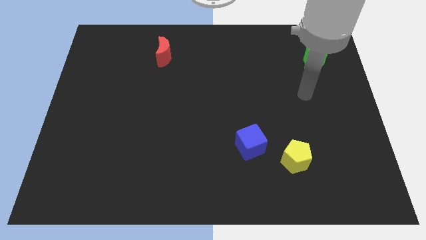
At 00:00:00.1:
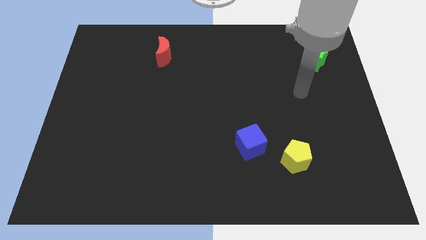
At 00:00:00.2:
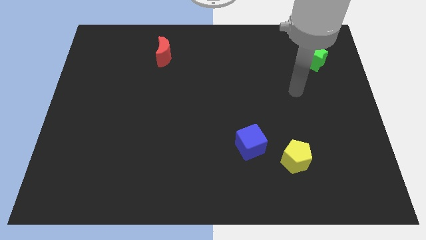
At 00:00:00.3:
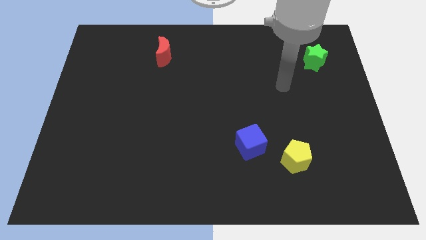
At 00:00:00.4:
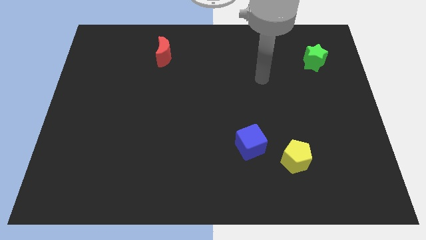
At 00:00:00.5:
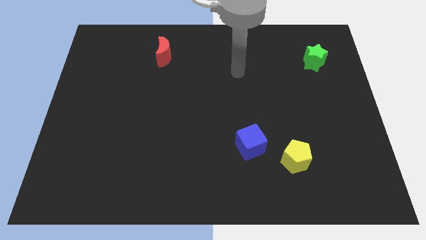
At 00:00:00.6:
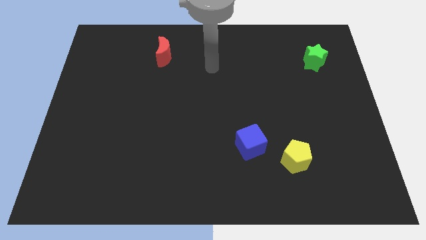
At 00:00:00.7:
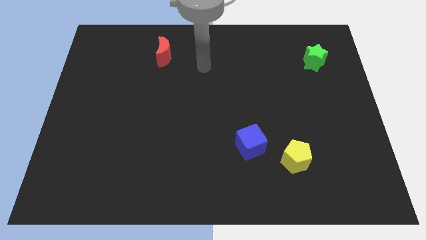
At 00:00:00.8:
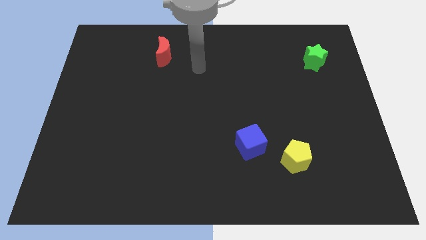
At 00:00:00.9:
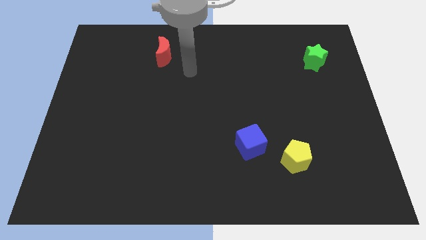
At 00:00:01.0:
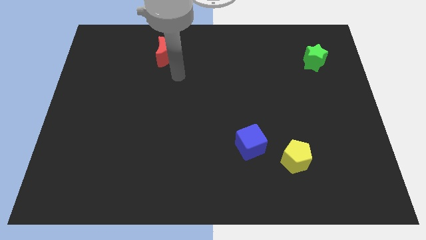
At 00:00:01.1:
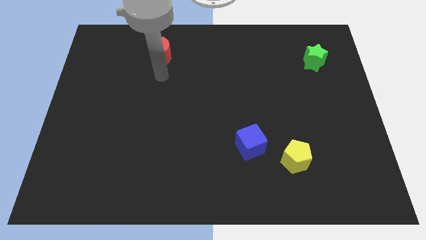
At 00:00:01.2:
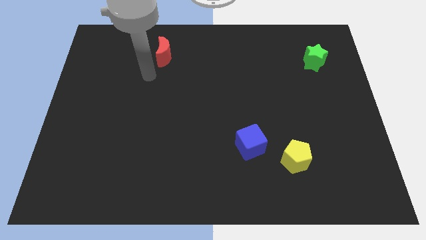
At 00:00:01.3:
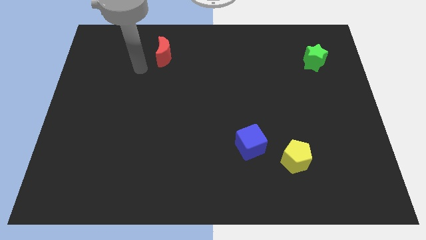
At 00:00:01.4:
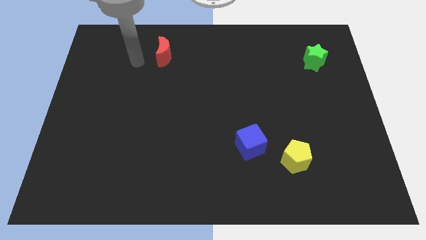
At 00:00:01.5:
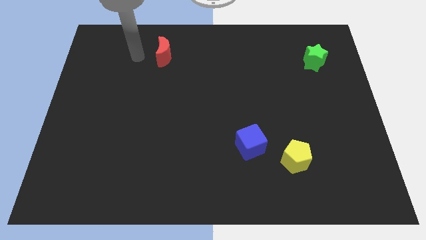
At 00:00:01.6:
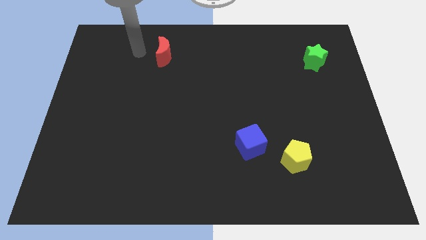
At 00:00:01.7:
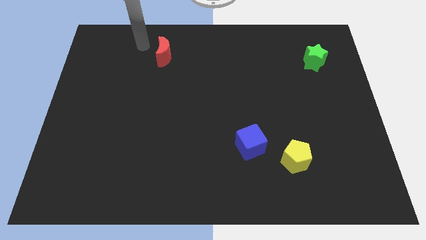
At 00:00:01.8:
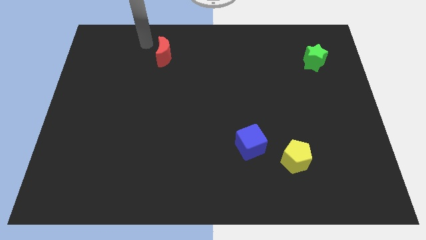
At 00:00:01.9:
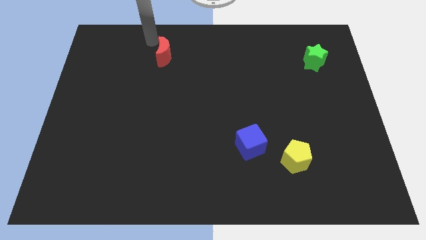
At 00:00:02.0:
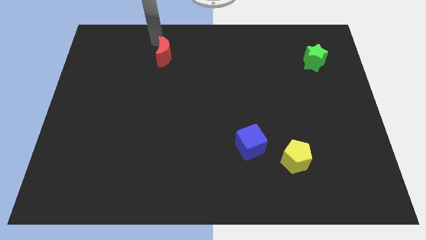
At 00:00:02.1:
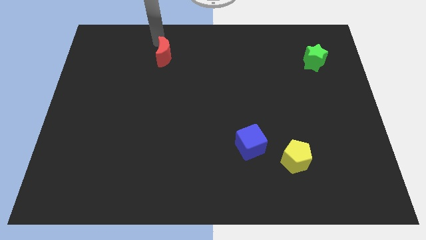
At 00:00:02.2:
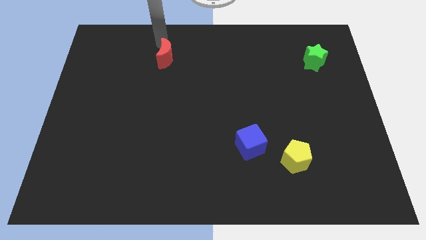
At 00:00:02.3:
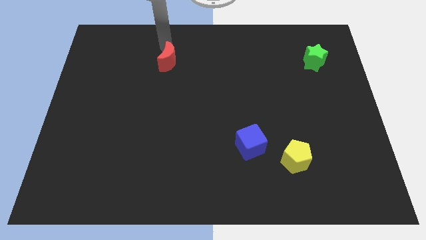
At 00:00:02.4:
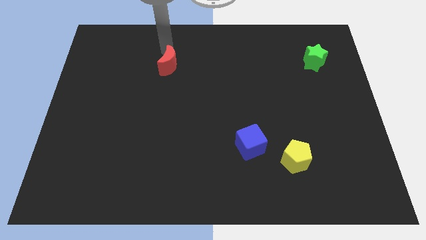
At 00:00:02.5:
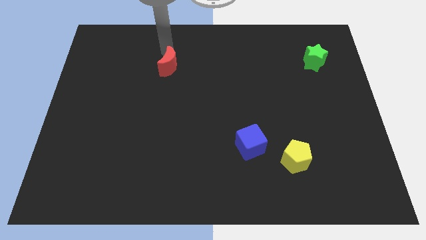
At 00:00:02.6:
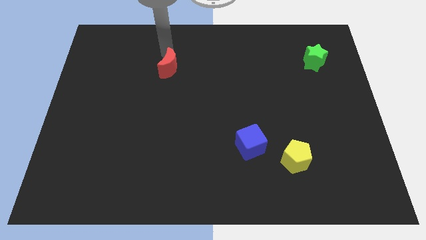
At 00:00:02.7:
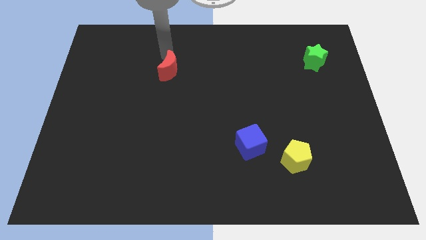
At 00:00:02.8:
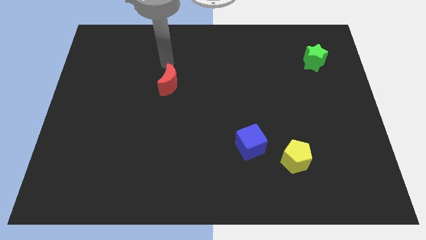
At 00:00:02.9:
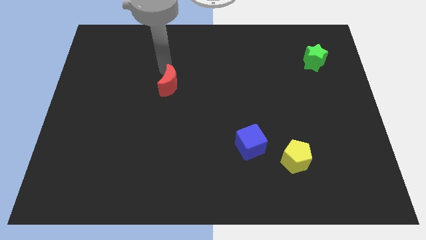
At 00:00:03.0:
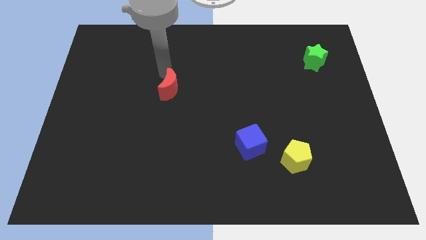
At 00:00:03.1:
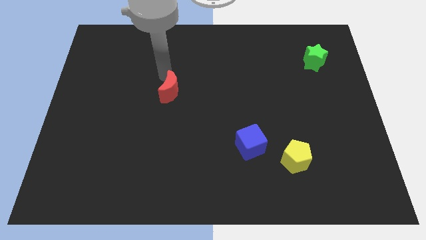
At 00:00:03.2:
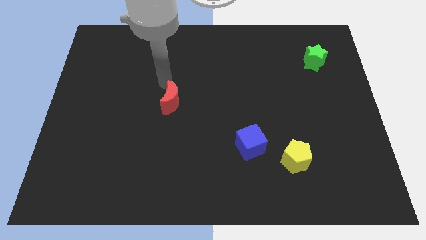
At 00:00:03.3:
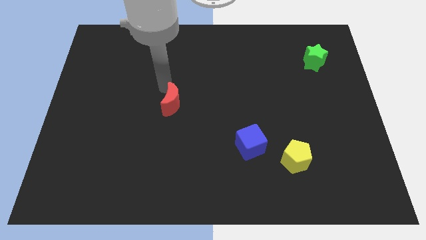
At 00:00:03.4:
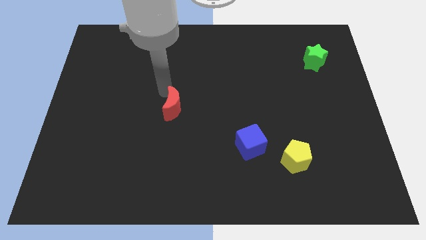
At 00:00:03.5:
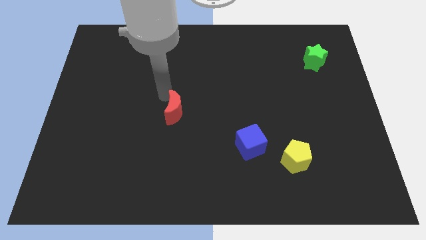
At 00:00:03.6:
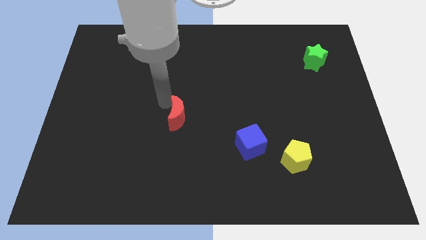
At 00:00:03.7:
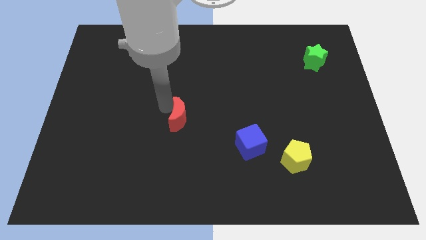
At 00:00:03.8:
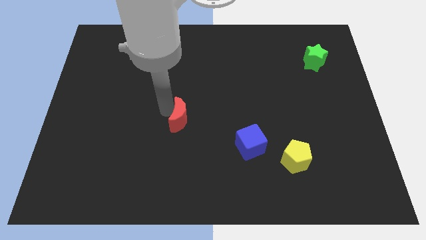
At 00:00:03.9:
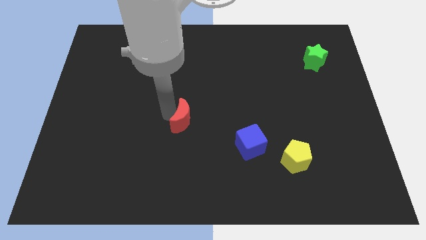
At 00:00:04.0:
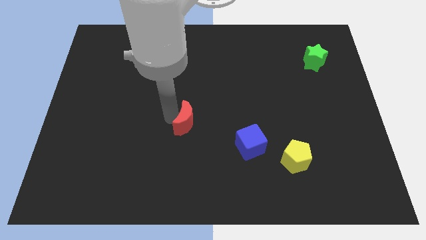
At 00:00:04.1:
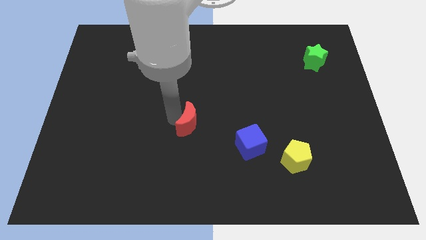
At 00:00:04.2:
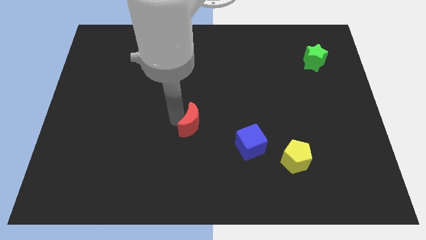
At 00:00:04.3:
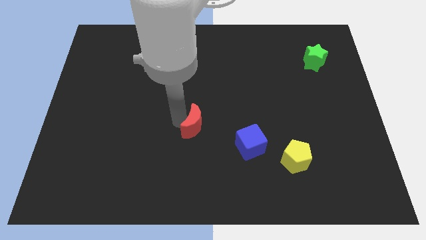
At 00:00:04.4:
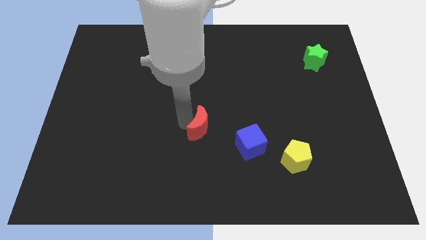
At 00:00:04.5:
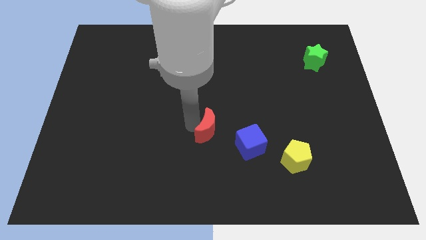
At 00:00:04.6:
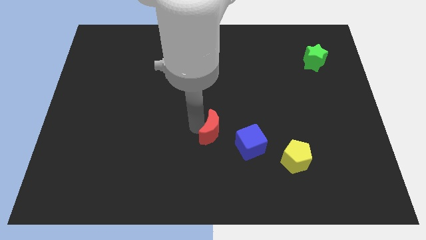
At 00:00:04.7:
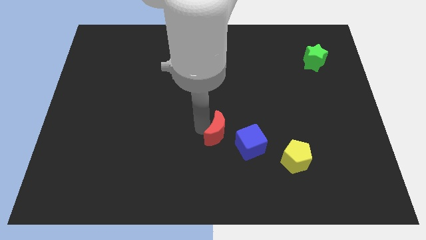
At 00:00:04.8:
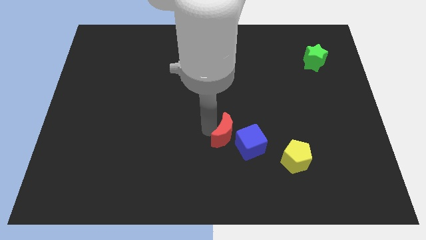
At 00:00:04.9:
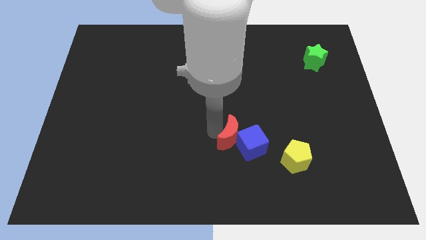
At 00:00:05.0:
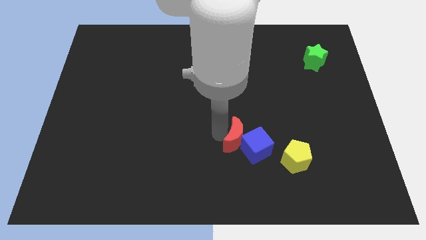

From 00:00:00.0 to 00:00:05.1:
slide the moon towards the cube

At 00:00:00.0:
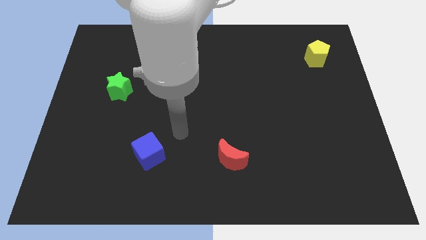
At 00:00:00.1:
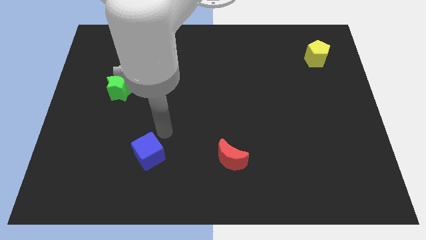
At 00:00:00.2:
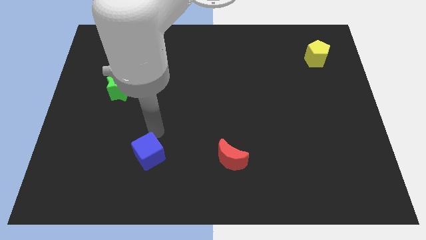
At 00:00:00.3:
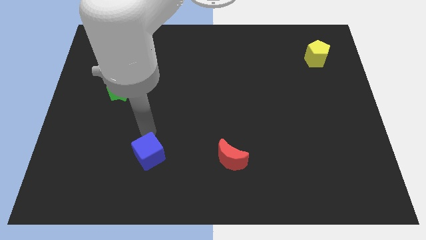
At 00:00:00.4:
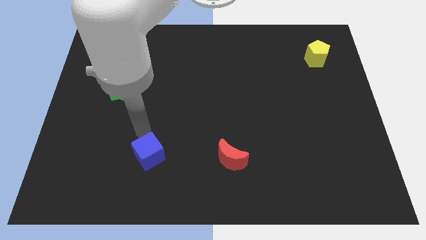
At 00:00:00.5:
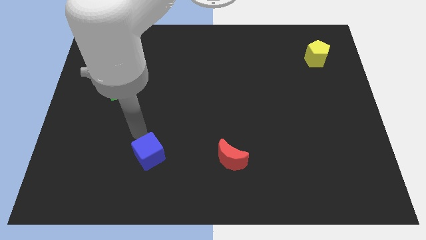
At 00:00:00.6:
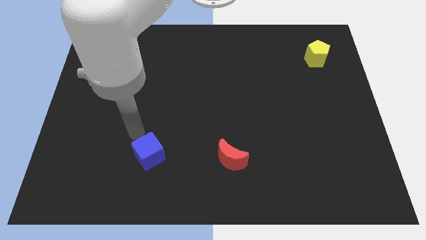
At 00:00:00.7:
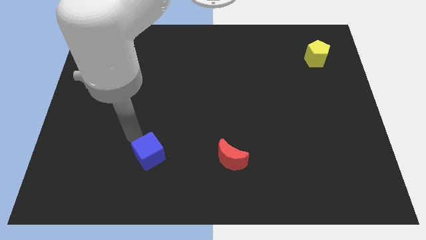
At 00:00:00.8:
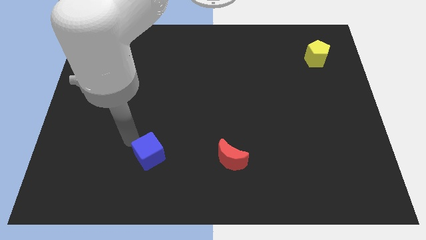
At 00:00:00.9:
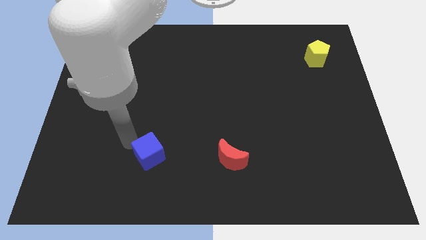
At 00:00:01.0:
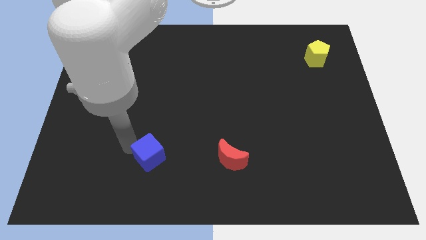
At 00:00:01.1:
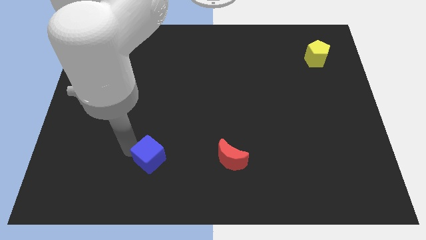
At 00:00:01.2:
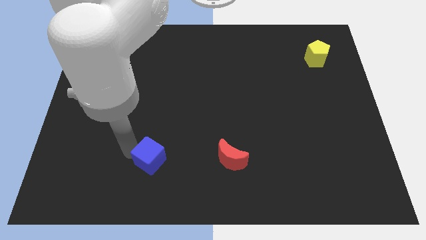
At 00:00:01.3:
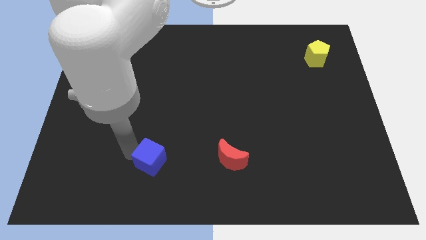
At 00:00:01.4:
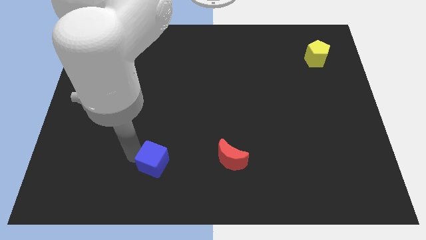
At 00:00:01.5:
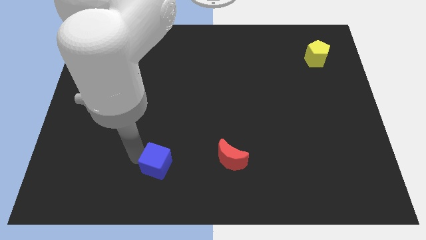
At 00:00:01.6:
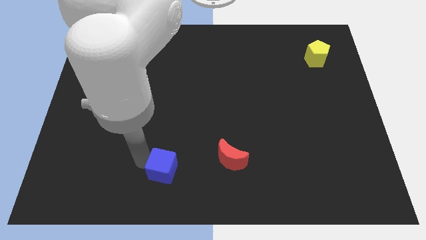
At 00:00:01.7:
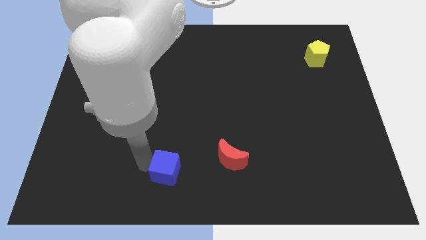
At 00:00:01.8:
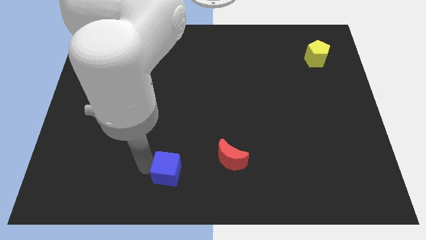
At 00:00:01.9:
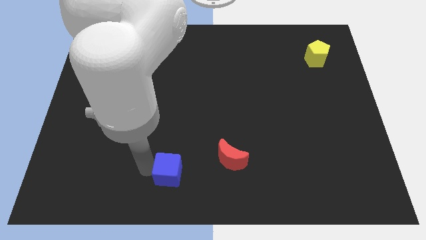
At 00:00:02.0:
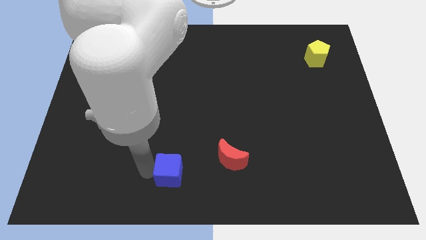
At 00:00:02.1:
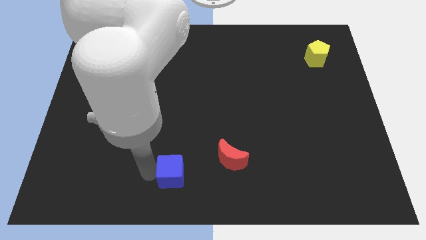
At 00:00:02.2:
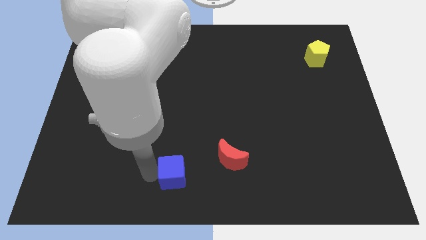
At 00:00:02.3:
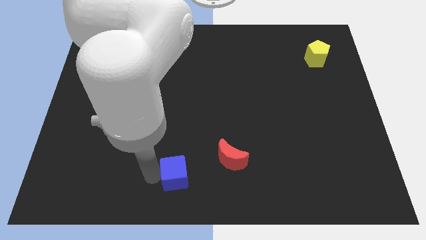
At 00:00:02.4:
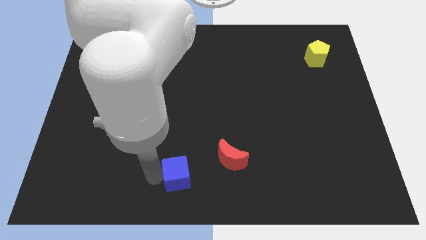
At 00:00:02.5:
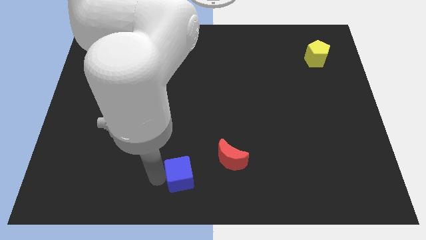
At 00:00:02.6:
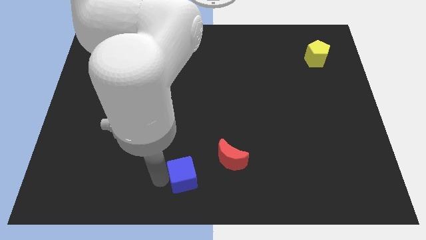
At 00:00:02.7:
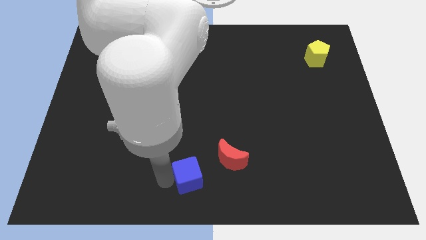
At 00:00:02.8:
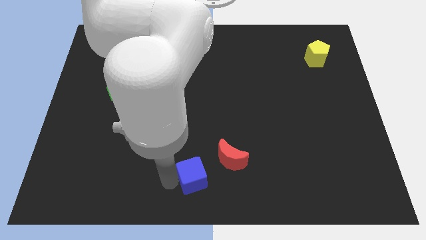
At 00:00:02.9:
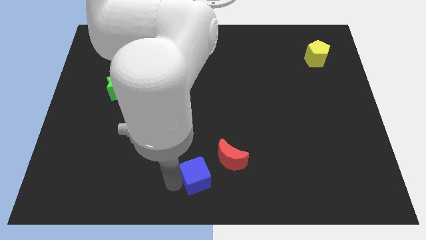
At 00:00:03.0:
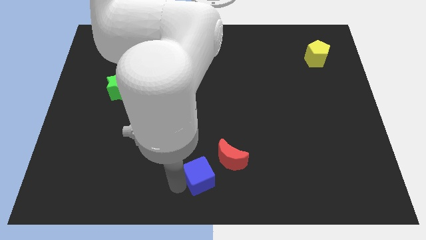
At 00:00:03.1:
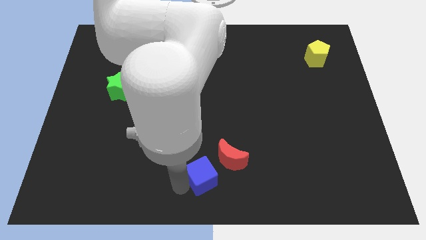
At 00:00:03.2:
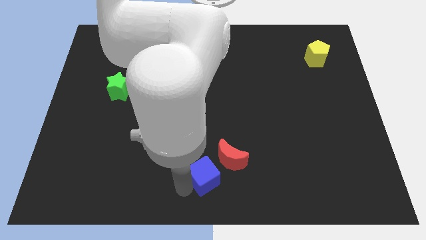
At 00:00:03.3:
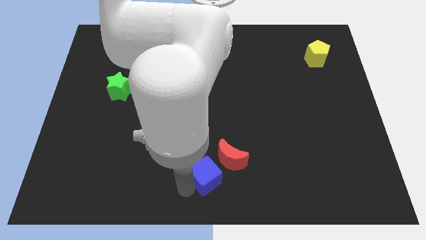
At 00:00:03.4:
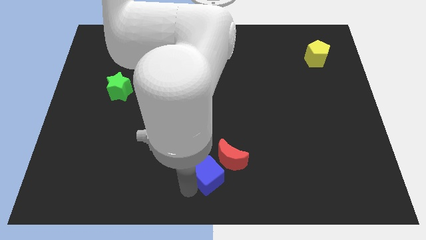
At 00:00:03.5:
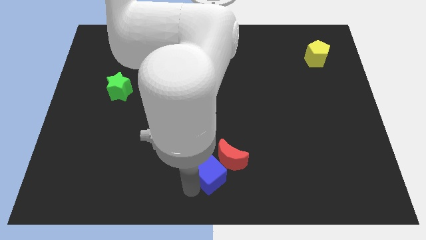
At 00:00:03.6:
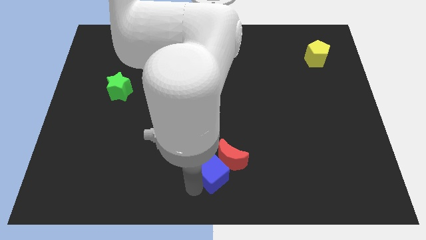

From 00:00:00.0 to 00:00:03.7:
put the cube towards the moon
